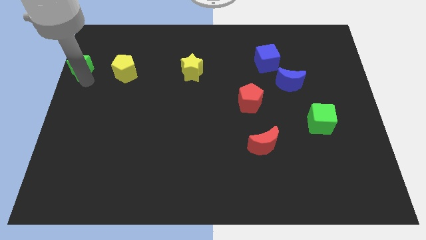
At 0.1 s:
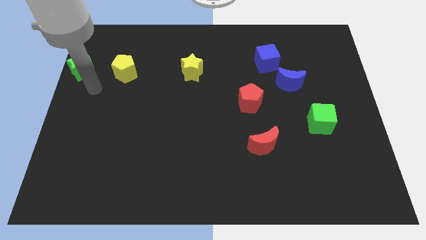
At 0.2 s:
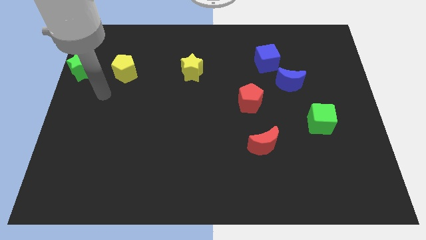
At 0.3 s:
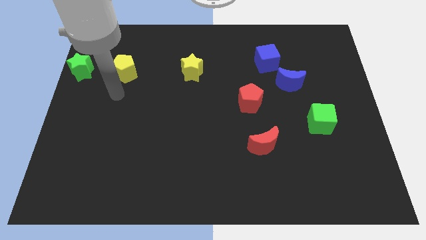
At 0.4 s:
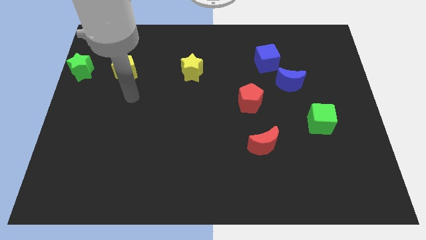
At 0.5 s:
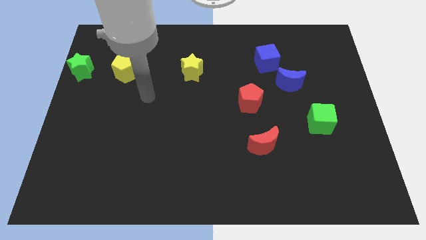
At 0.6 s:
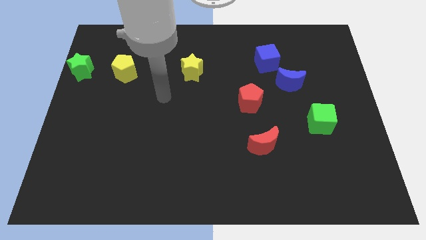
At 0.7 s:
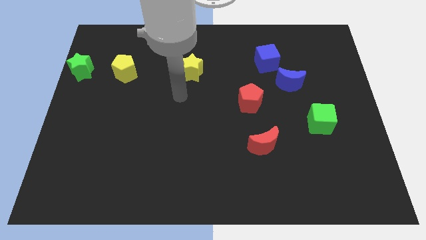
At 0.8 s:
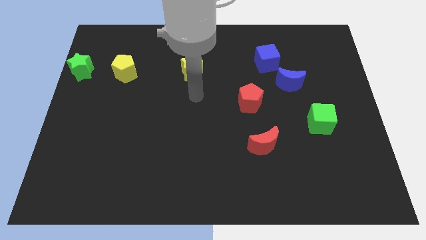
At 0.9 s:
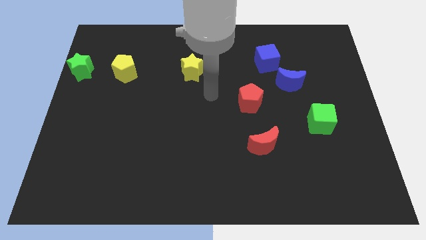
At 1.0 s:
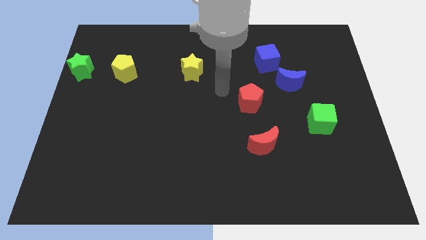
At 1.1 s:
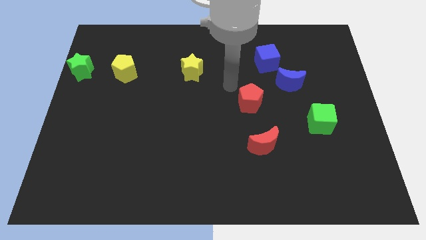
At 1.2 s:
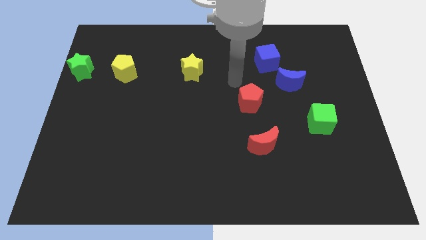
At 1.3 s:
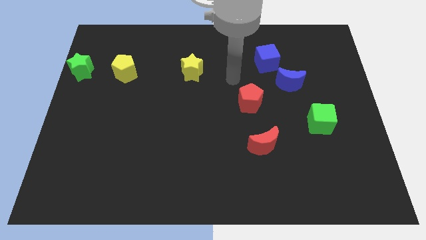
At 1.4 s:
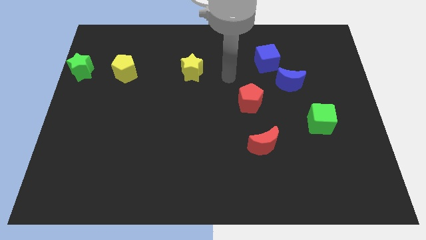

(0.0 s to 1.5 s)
move your arm away from the green star

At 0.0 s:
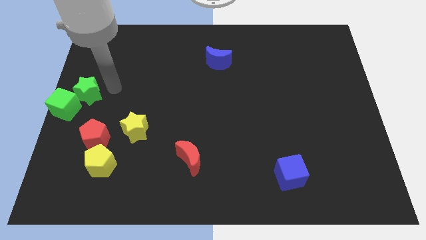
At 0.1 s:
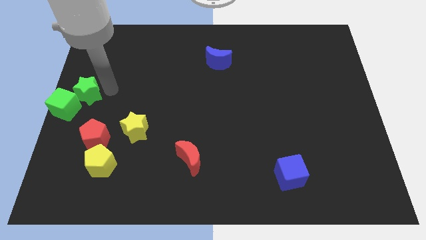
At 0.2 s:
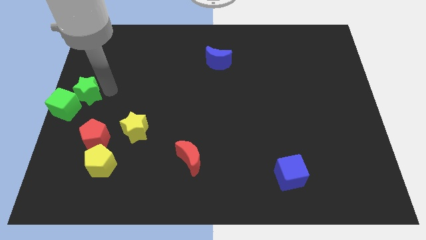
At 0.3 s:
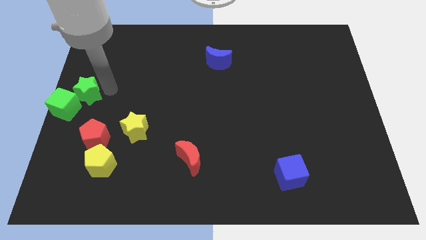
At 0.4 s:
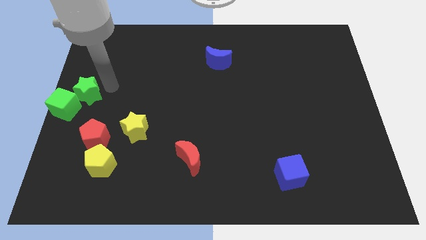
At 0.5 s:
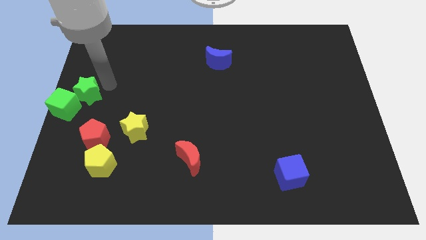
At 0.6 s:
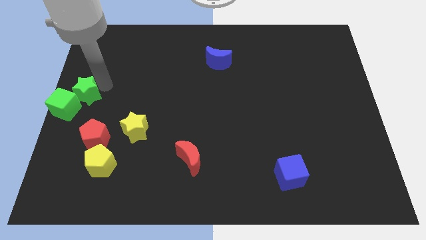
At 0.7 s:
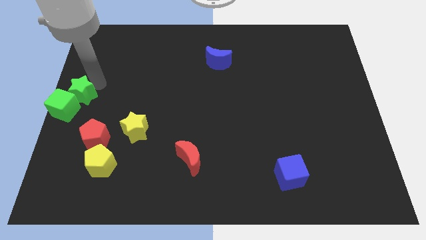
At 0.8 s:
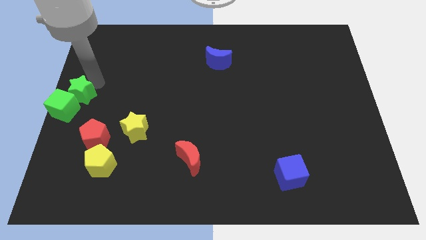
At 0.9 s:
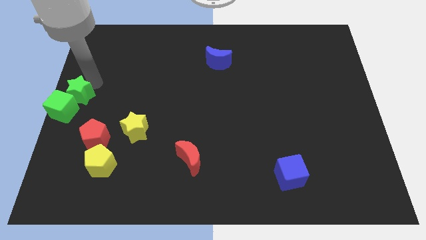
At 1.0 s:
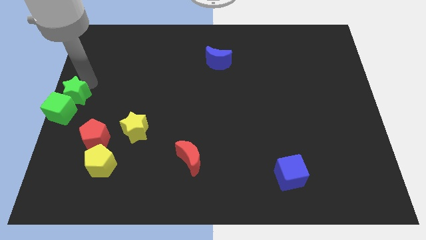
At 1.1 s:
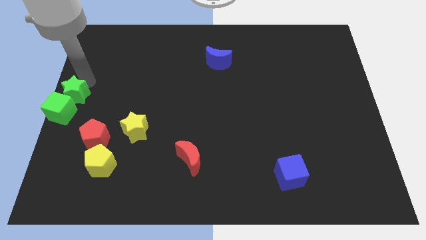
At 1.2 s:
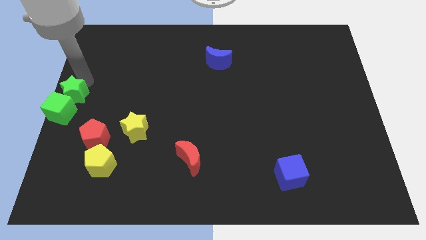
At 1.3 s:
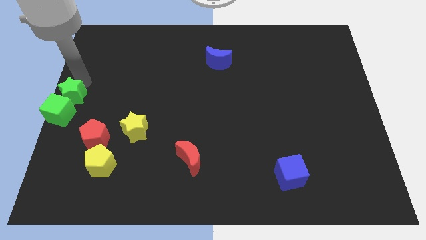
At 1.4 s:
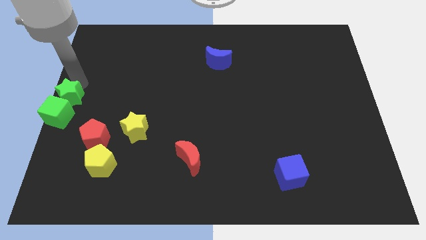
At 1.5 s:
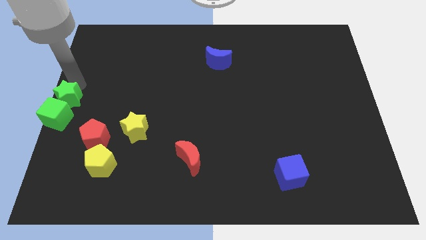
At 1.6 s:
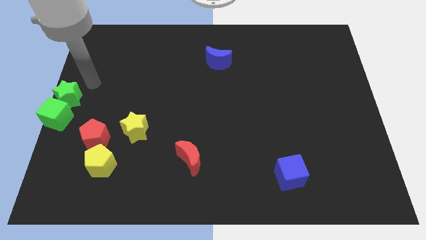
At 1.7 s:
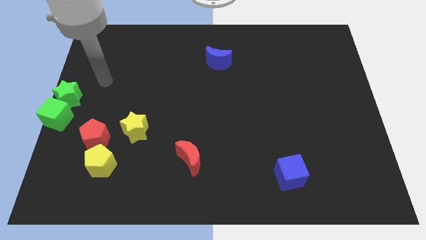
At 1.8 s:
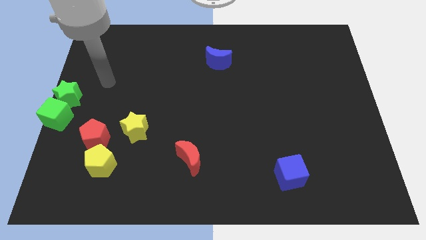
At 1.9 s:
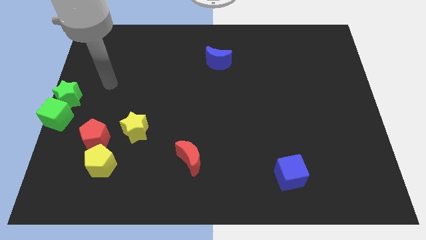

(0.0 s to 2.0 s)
move the green star to the top side of the green cube

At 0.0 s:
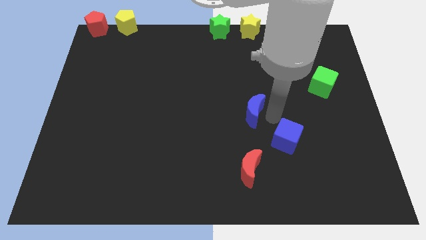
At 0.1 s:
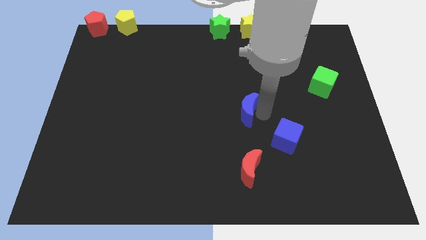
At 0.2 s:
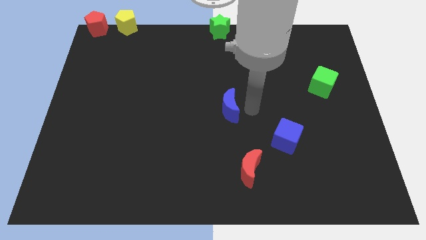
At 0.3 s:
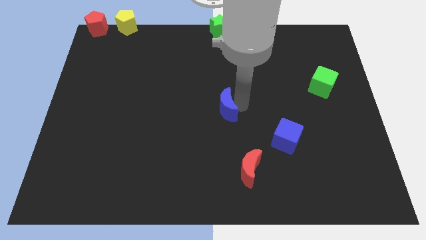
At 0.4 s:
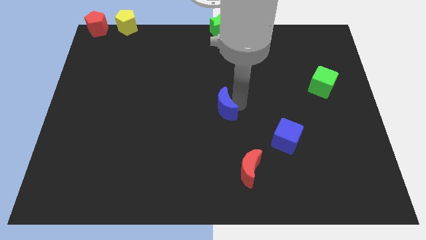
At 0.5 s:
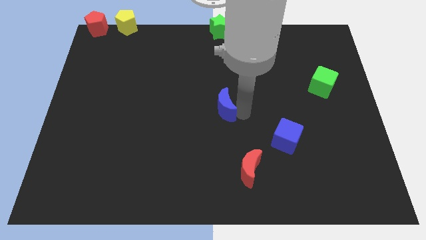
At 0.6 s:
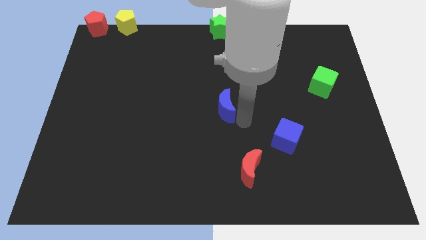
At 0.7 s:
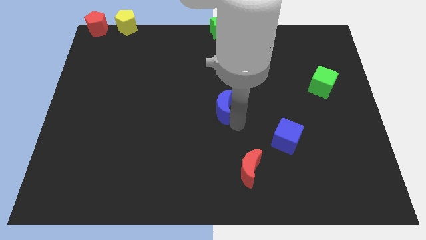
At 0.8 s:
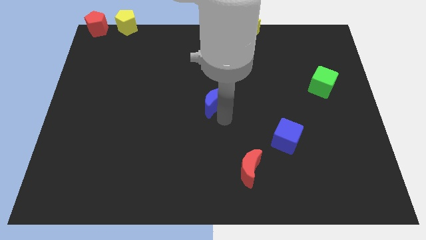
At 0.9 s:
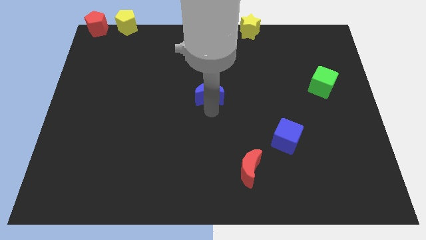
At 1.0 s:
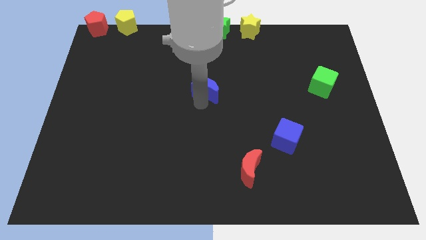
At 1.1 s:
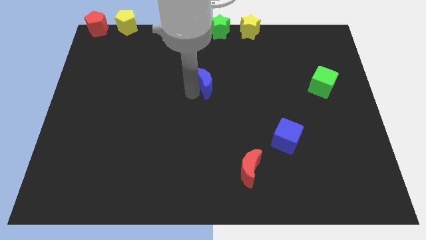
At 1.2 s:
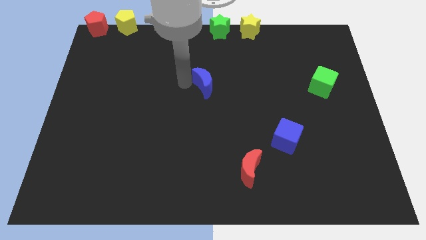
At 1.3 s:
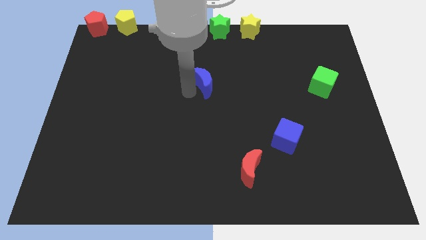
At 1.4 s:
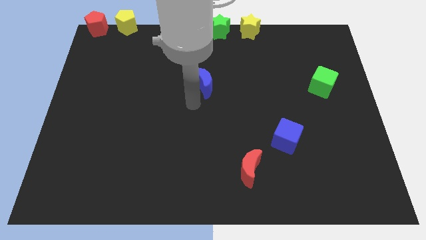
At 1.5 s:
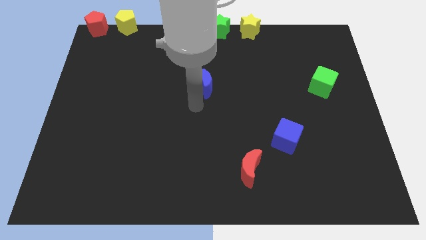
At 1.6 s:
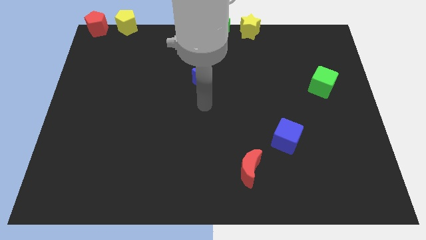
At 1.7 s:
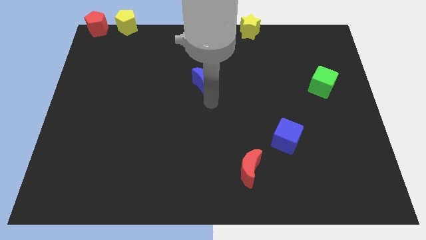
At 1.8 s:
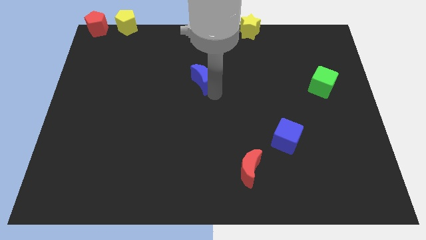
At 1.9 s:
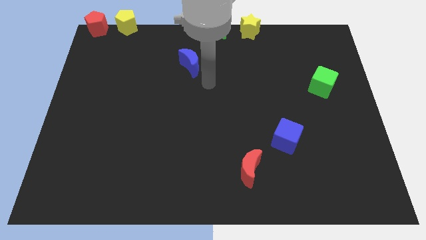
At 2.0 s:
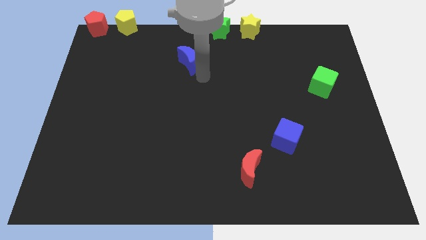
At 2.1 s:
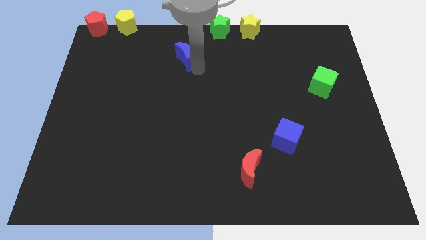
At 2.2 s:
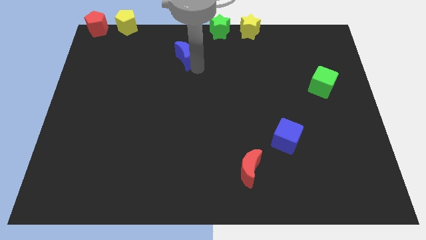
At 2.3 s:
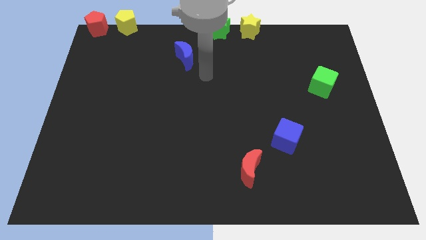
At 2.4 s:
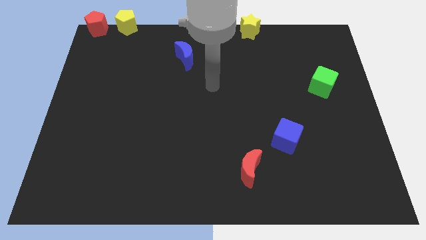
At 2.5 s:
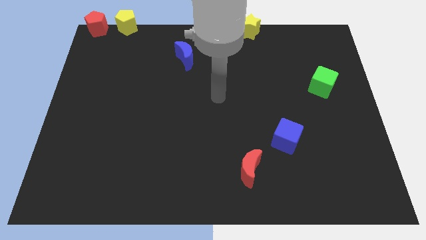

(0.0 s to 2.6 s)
move the blue moon diagonal below green star

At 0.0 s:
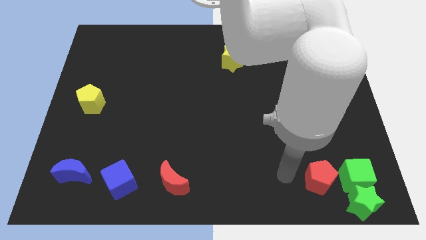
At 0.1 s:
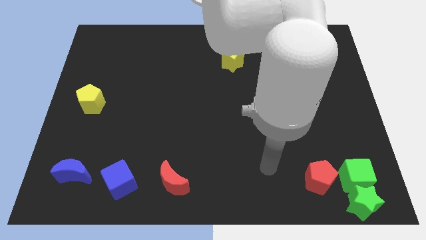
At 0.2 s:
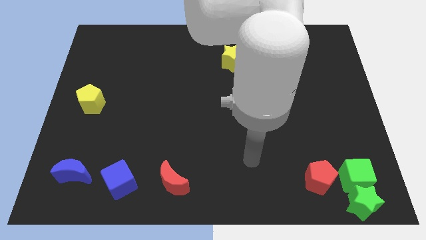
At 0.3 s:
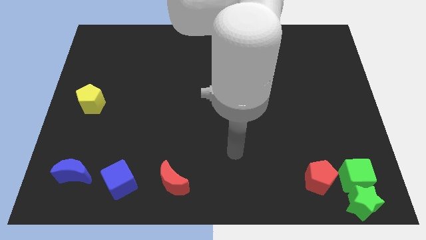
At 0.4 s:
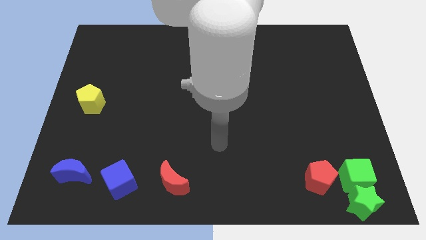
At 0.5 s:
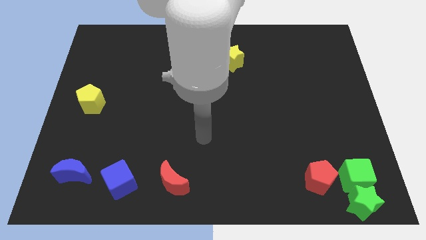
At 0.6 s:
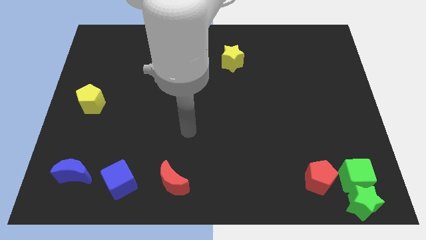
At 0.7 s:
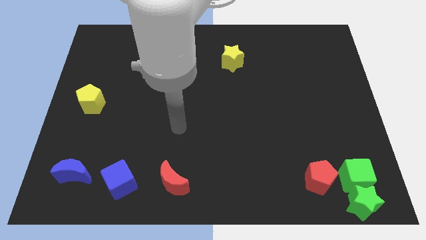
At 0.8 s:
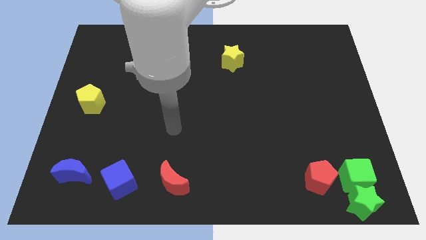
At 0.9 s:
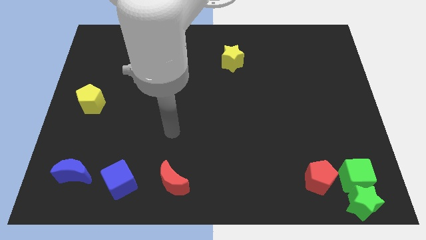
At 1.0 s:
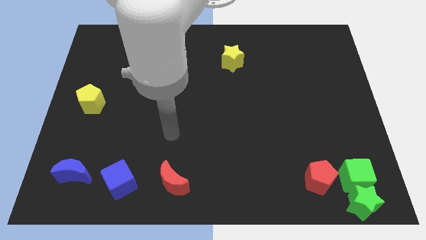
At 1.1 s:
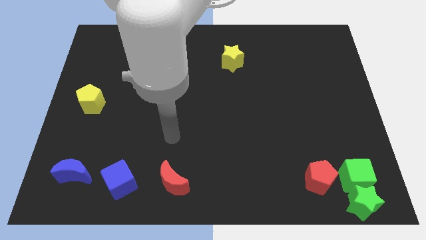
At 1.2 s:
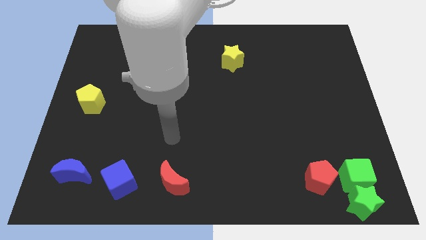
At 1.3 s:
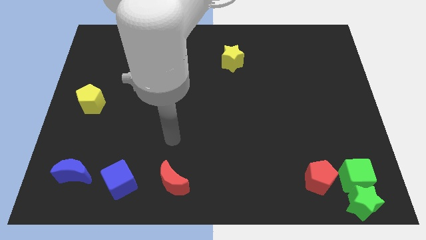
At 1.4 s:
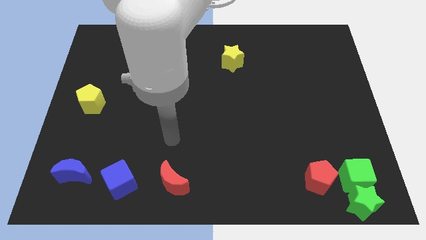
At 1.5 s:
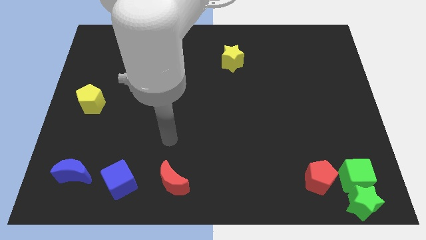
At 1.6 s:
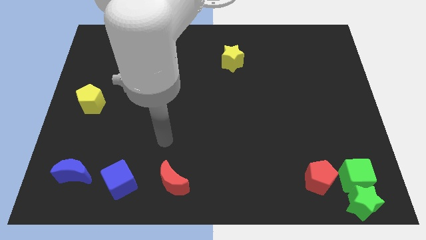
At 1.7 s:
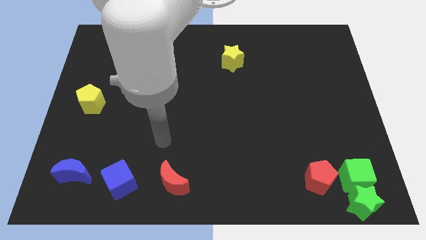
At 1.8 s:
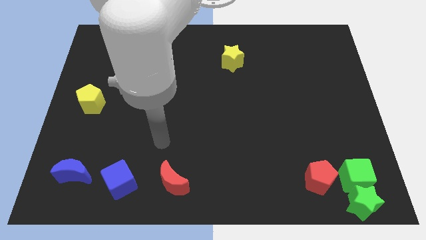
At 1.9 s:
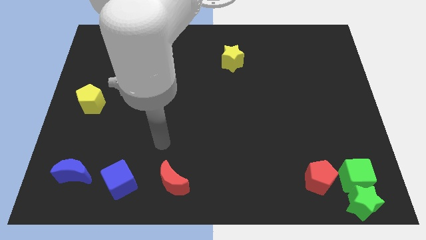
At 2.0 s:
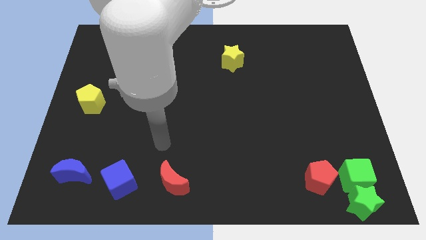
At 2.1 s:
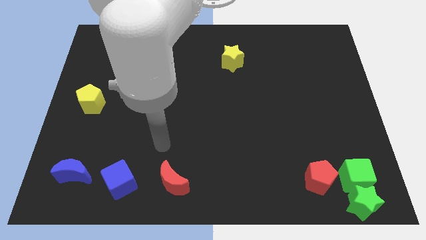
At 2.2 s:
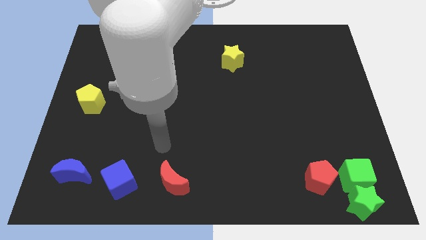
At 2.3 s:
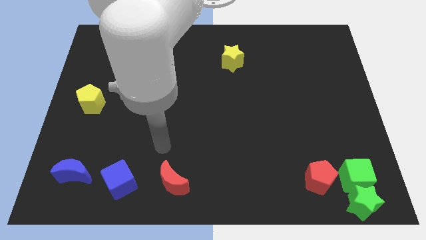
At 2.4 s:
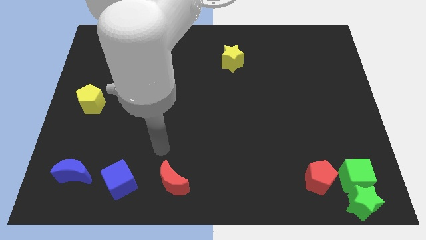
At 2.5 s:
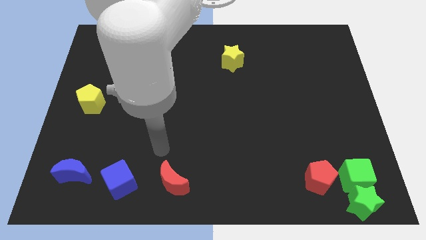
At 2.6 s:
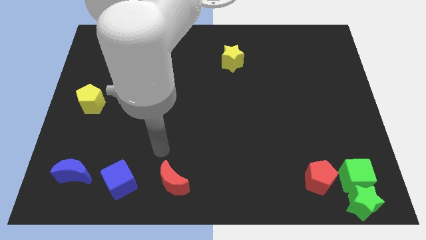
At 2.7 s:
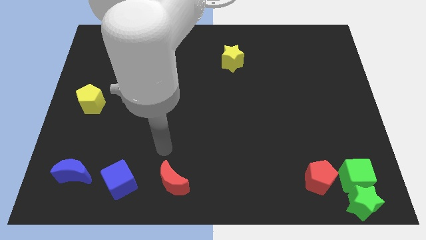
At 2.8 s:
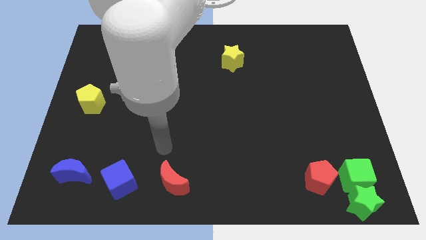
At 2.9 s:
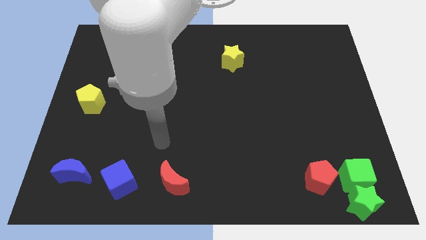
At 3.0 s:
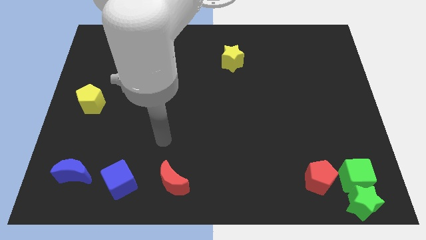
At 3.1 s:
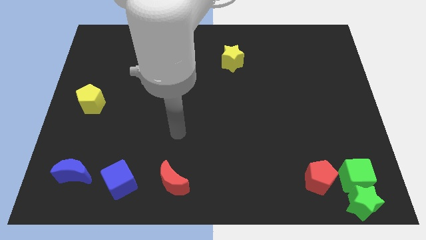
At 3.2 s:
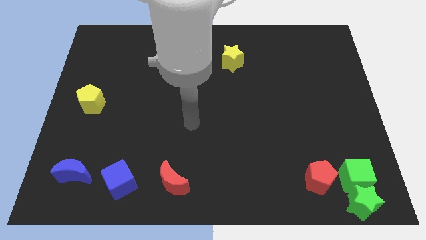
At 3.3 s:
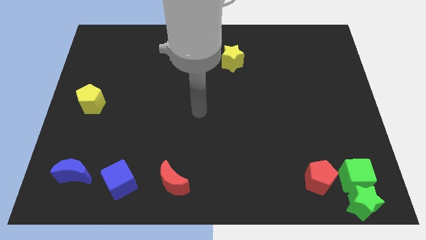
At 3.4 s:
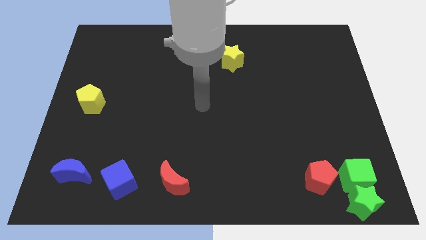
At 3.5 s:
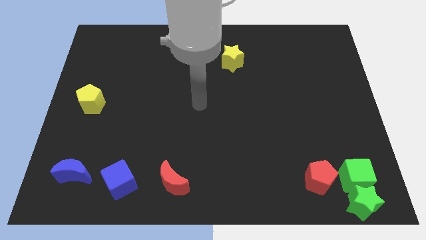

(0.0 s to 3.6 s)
move your arm away from the red pentagon
